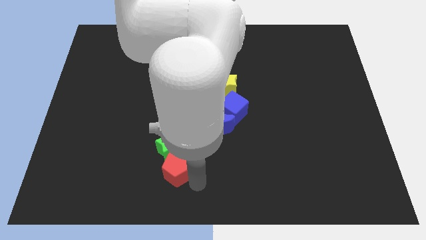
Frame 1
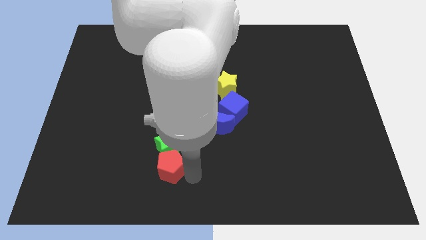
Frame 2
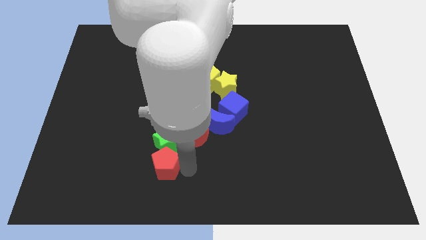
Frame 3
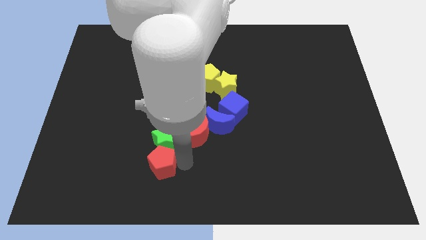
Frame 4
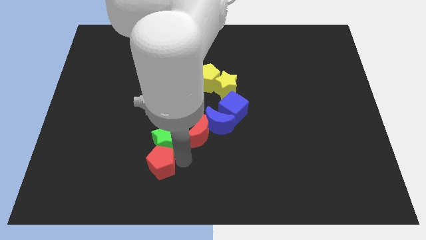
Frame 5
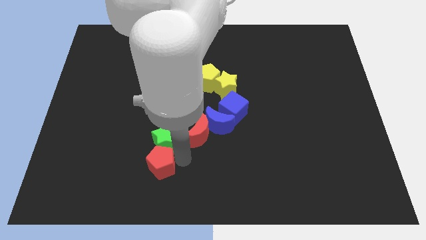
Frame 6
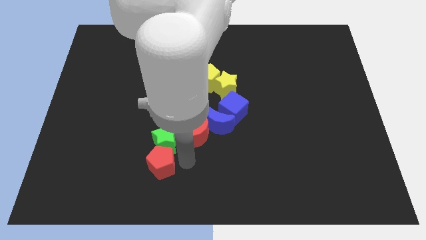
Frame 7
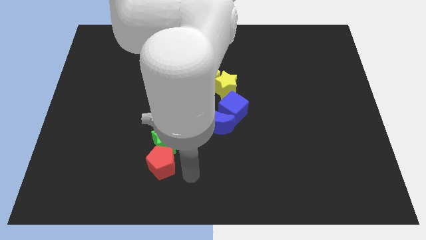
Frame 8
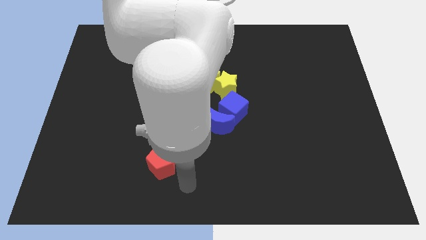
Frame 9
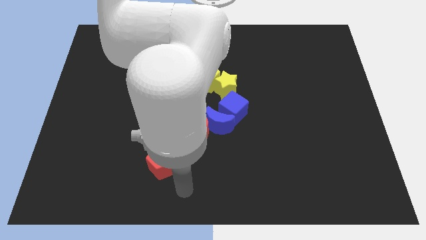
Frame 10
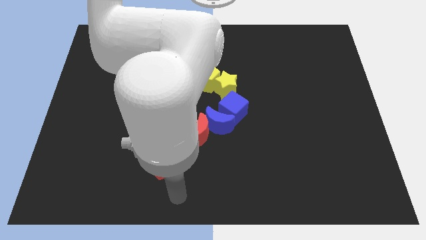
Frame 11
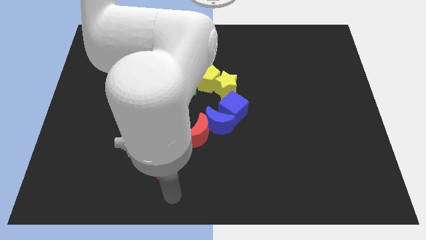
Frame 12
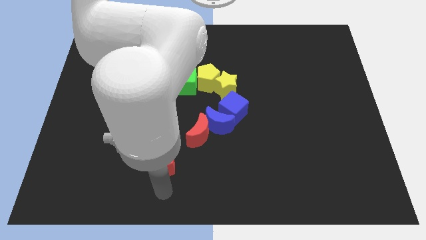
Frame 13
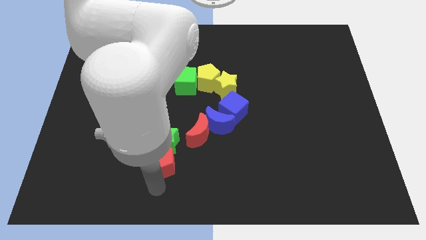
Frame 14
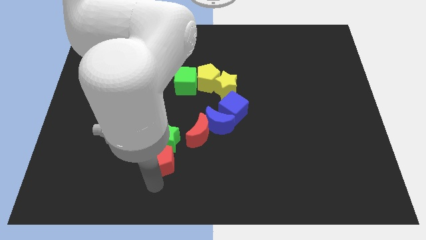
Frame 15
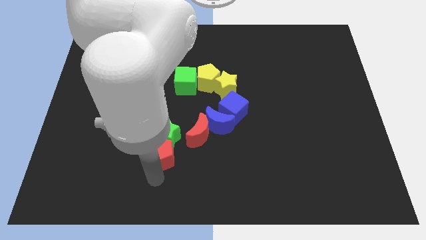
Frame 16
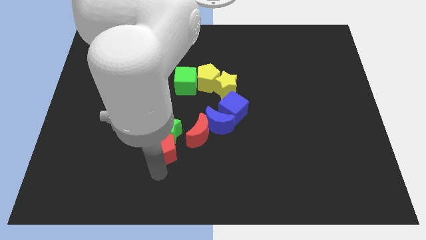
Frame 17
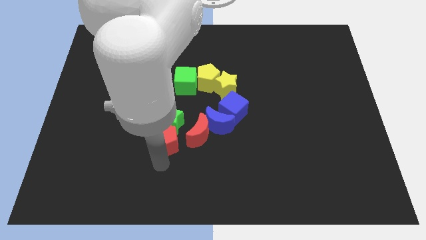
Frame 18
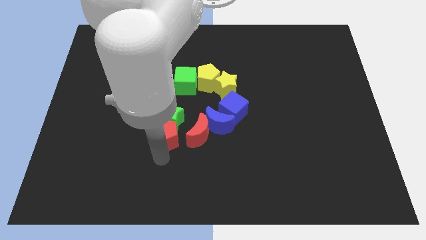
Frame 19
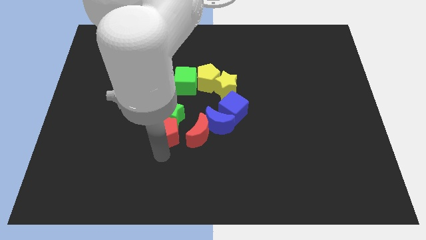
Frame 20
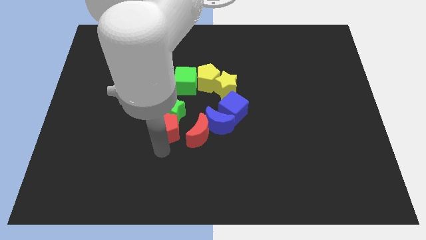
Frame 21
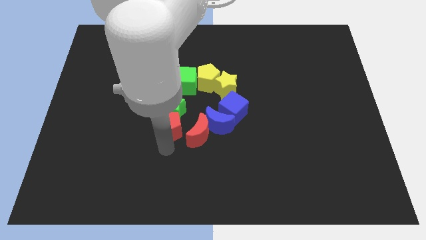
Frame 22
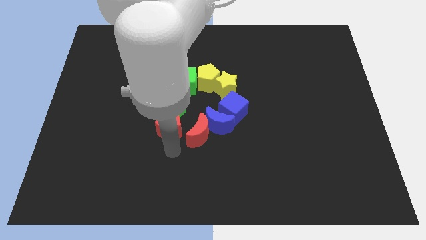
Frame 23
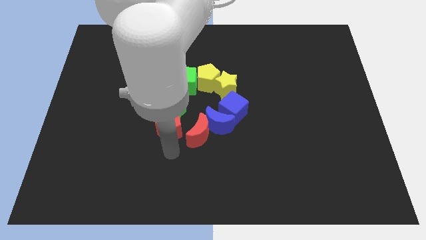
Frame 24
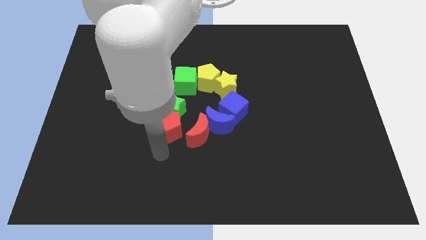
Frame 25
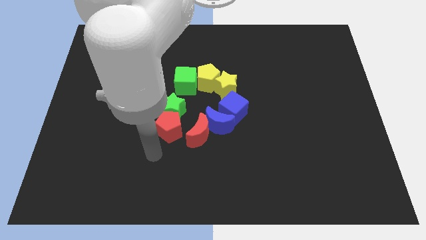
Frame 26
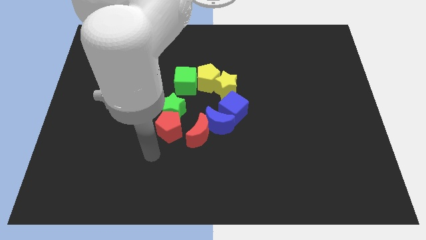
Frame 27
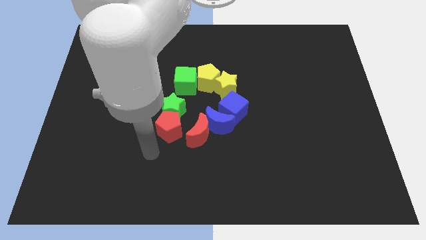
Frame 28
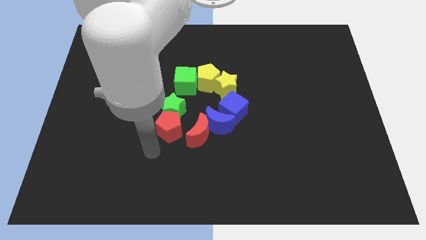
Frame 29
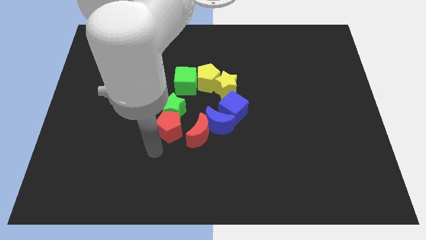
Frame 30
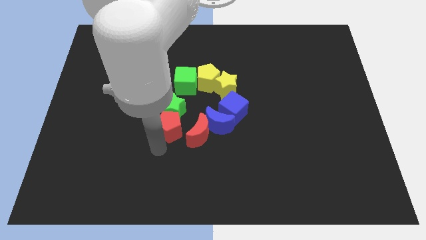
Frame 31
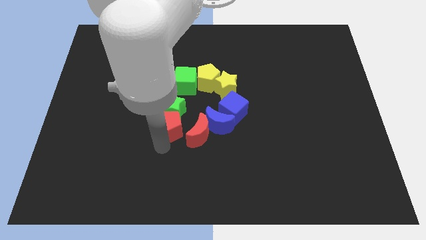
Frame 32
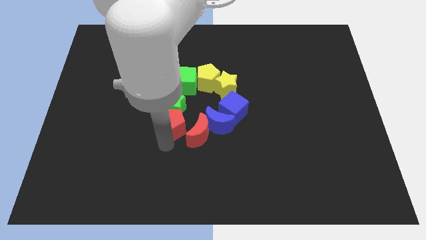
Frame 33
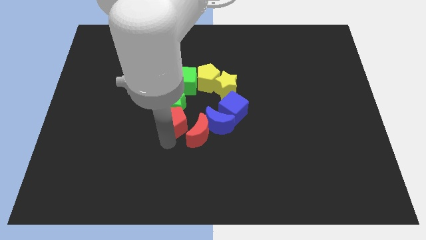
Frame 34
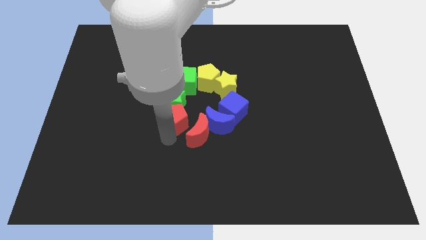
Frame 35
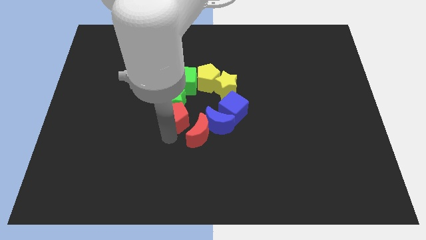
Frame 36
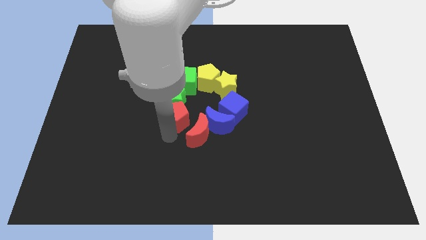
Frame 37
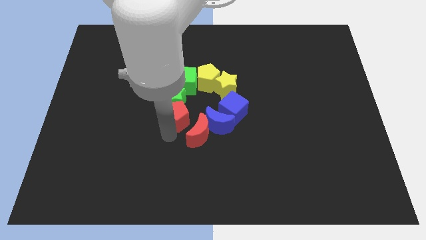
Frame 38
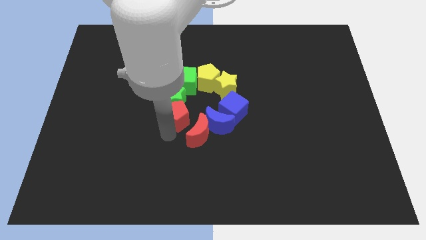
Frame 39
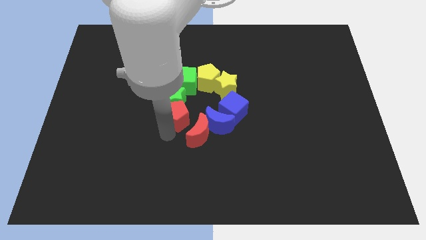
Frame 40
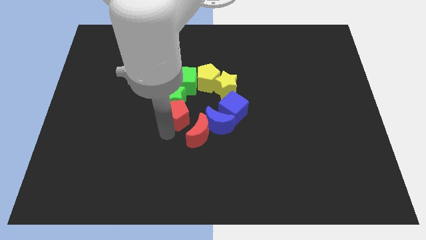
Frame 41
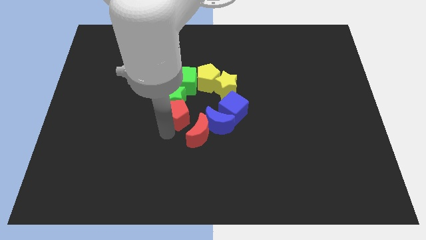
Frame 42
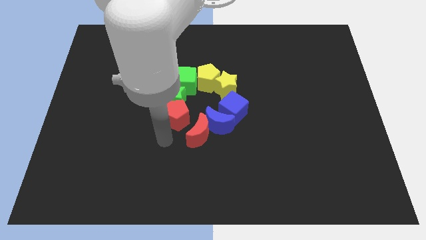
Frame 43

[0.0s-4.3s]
push the green star with the red pentagon towards the green cube

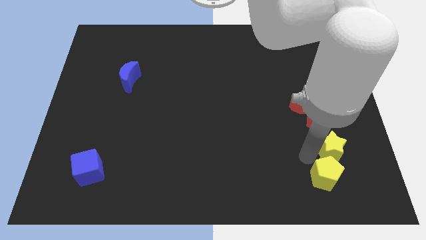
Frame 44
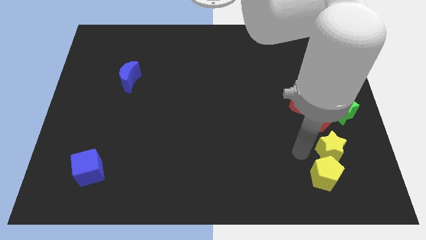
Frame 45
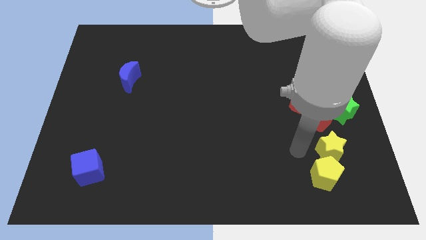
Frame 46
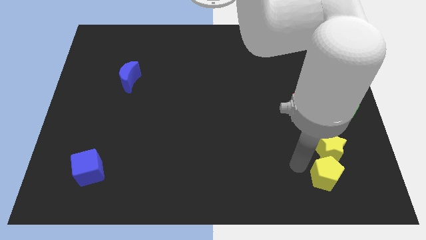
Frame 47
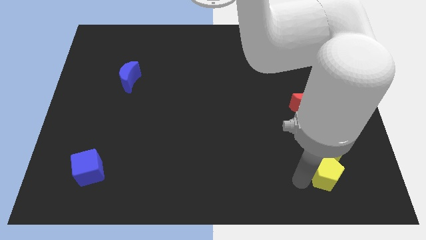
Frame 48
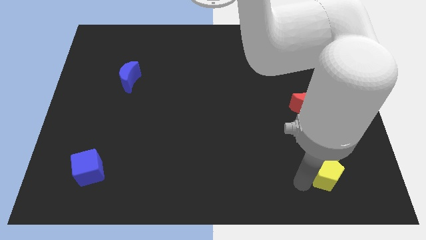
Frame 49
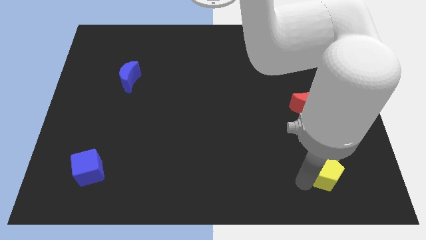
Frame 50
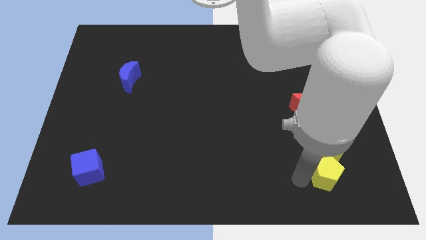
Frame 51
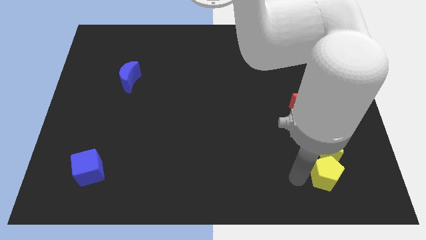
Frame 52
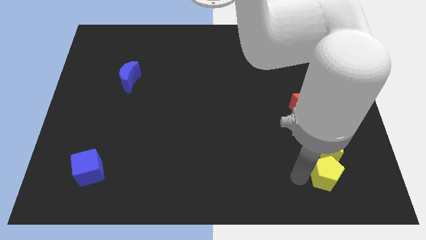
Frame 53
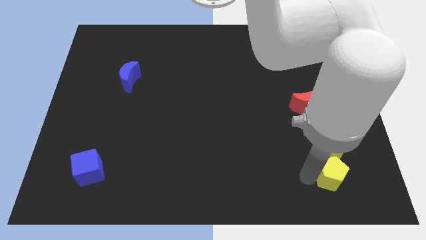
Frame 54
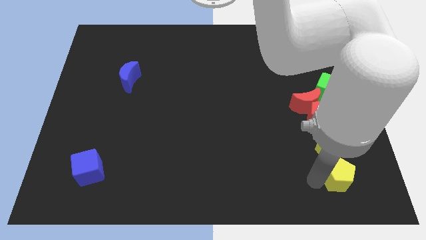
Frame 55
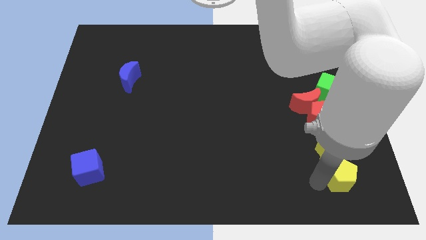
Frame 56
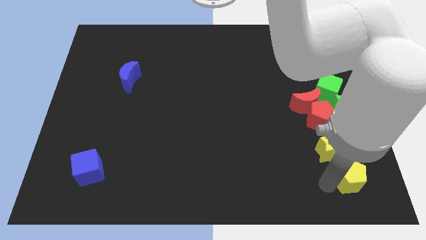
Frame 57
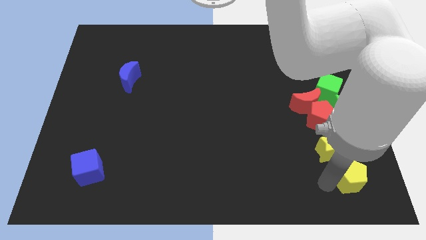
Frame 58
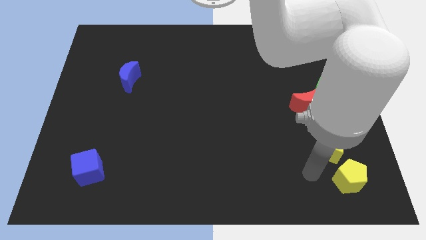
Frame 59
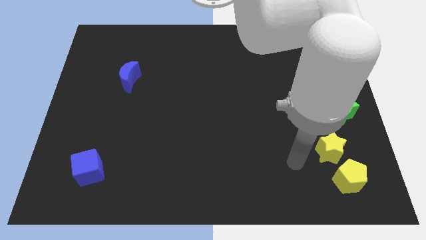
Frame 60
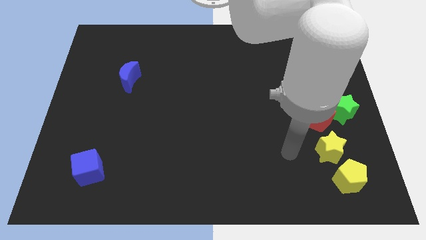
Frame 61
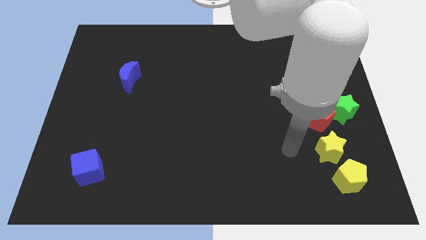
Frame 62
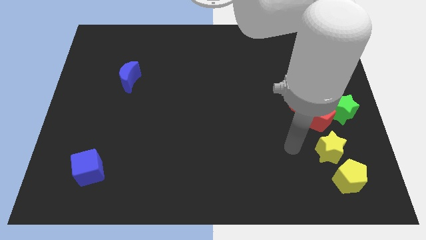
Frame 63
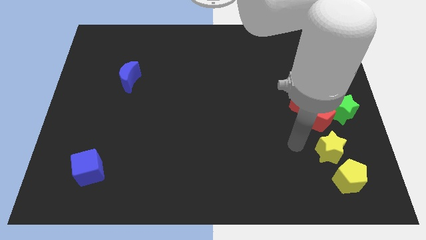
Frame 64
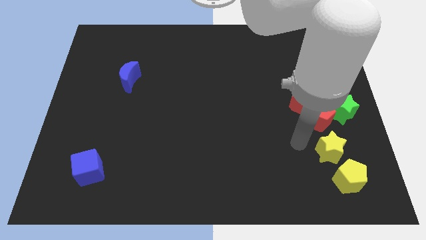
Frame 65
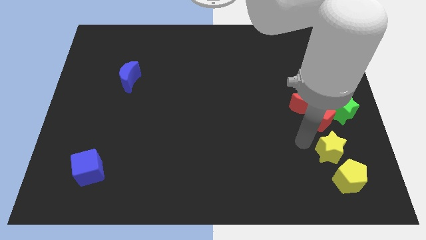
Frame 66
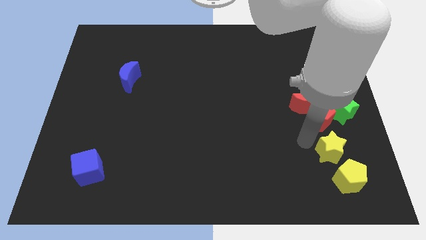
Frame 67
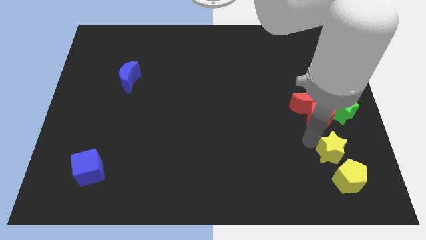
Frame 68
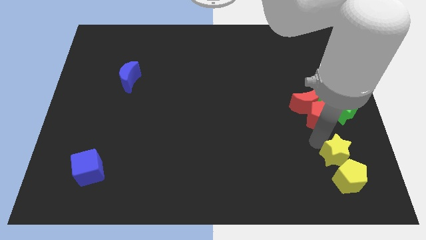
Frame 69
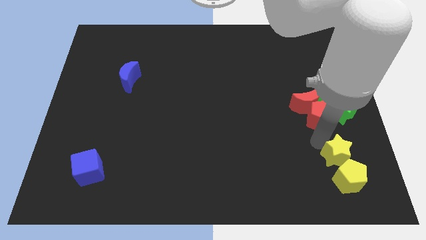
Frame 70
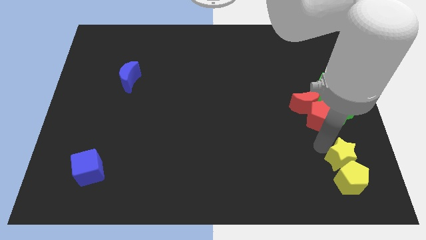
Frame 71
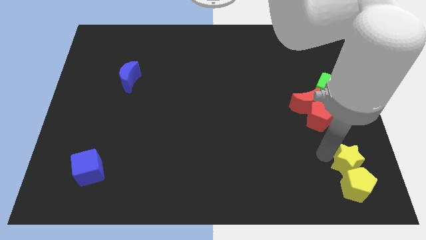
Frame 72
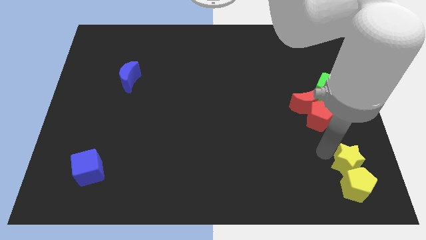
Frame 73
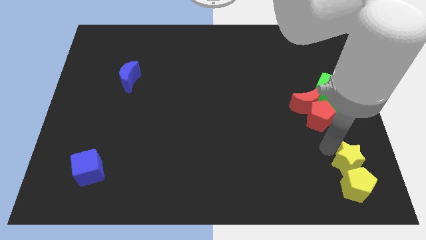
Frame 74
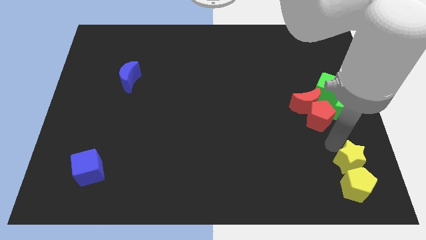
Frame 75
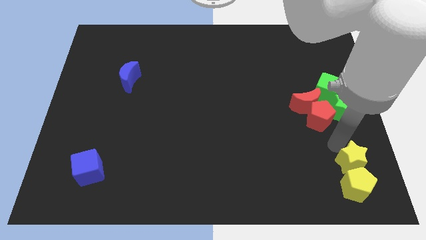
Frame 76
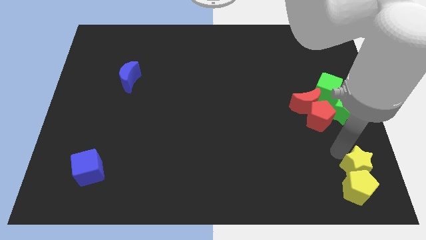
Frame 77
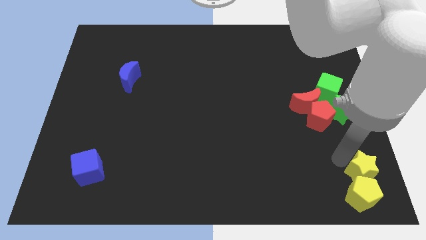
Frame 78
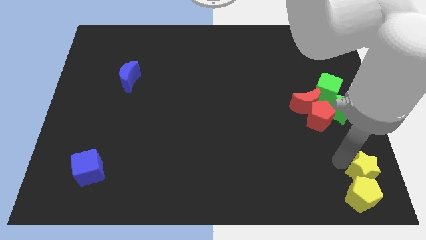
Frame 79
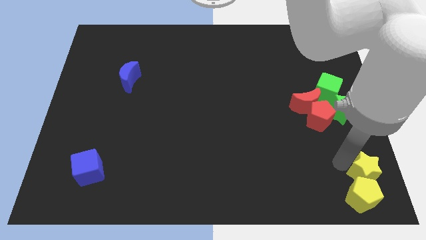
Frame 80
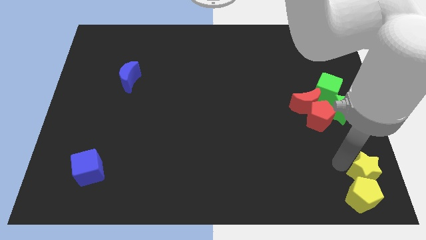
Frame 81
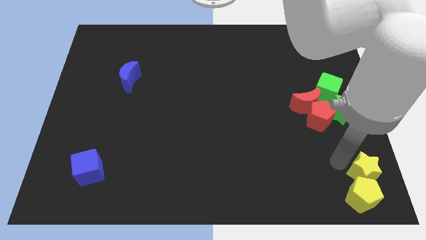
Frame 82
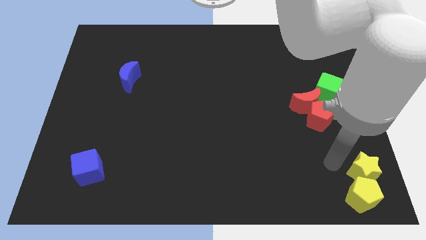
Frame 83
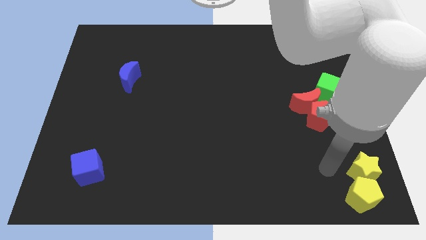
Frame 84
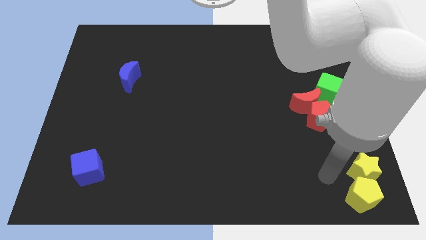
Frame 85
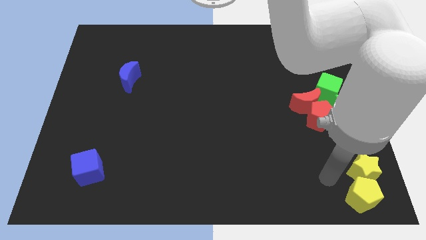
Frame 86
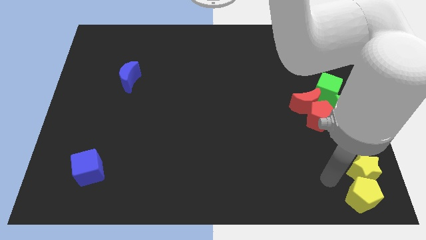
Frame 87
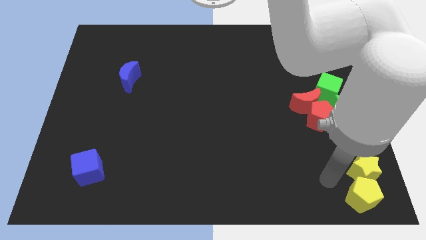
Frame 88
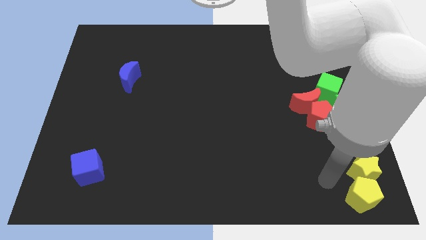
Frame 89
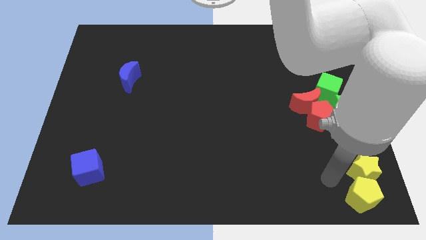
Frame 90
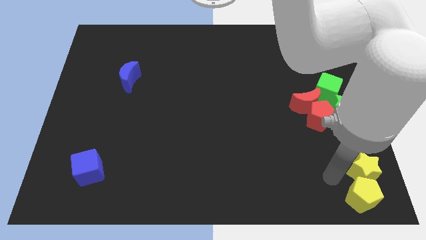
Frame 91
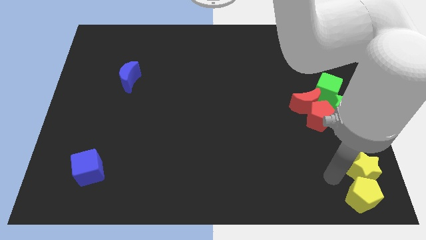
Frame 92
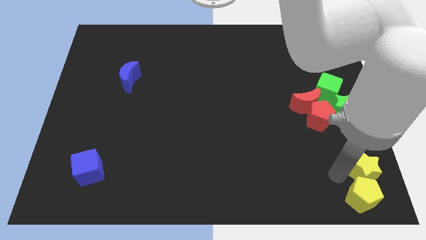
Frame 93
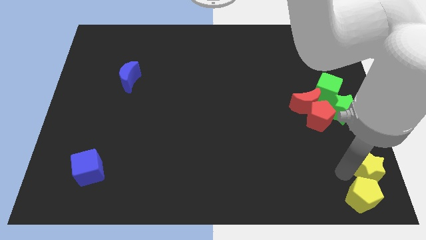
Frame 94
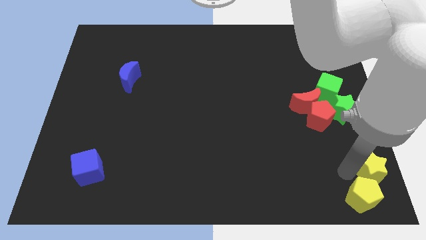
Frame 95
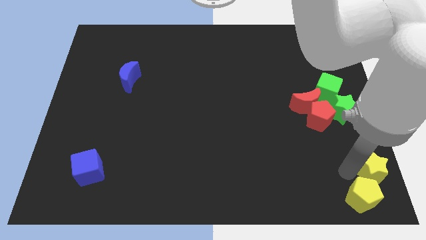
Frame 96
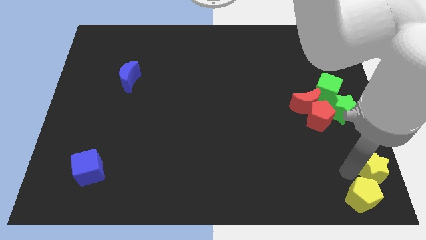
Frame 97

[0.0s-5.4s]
move yellow star to the bottom right
